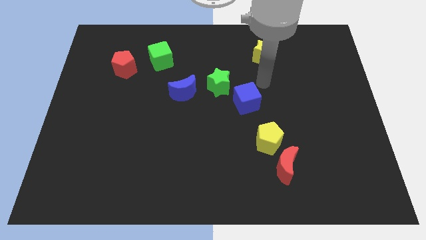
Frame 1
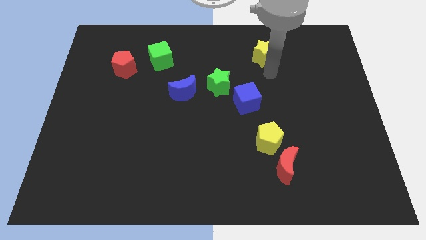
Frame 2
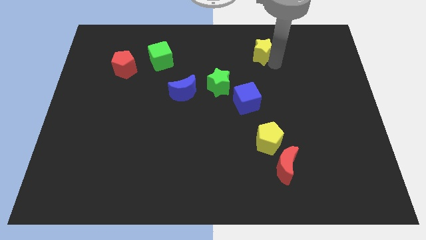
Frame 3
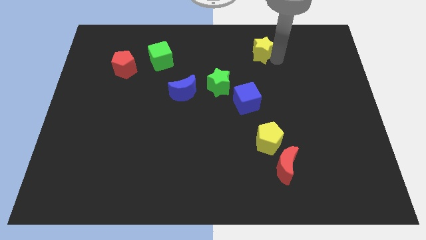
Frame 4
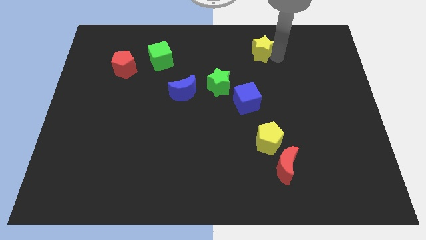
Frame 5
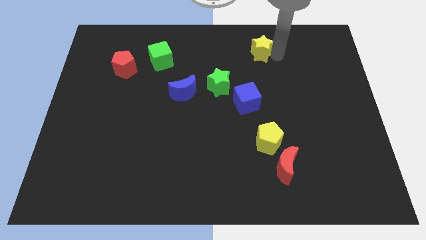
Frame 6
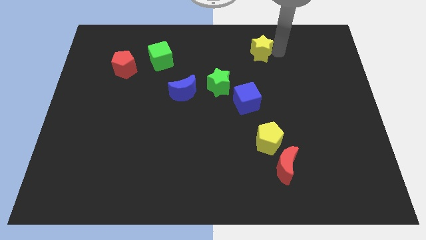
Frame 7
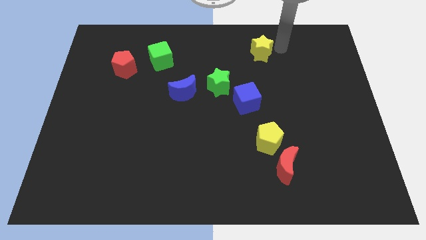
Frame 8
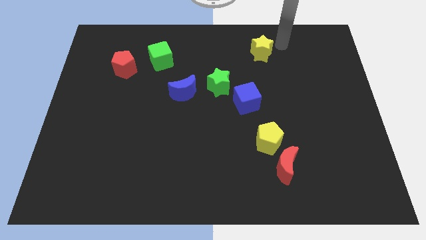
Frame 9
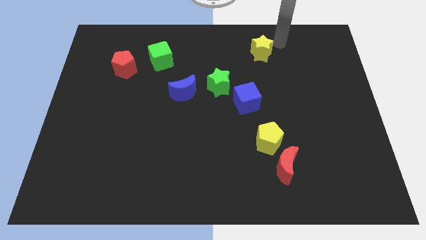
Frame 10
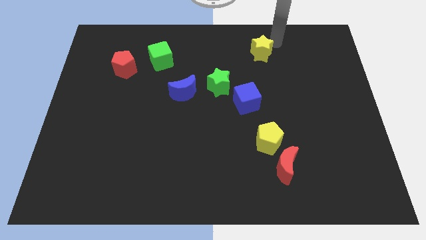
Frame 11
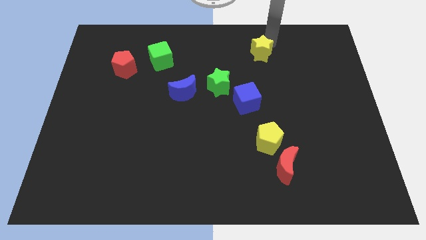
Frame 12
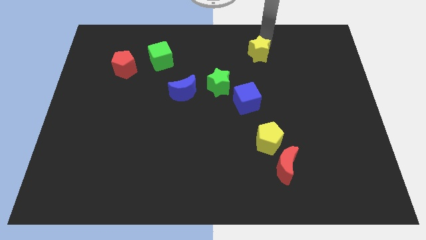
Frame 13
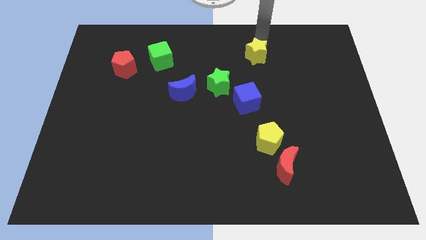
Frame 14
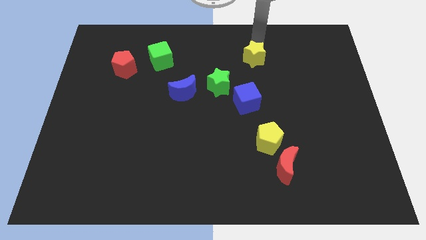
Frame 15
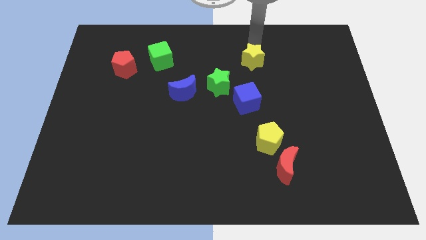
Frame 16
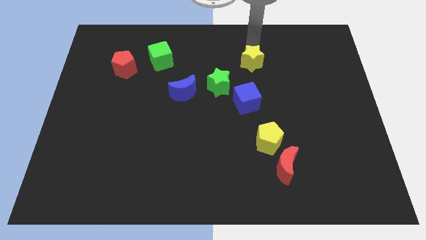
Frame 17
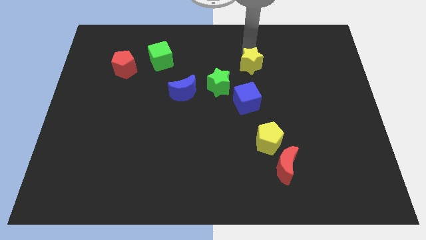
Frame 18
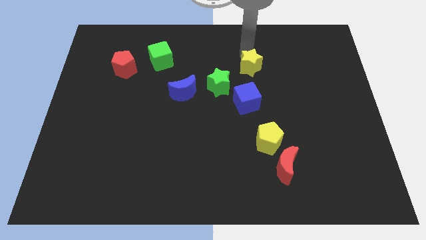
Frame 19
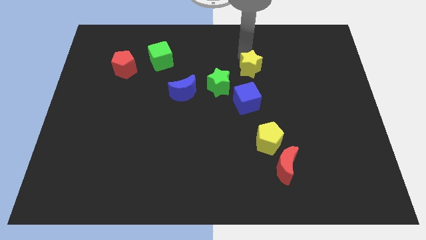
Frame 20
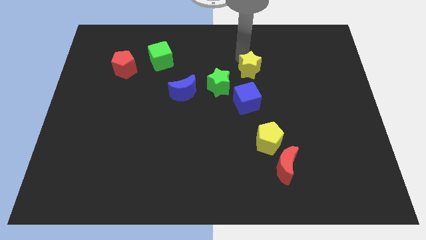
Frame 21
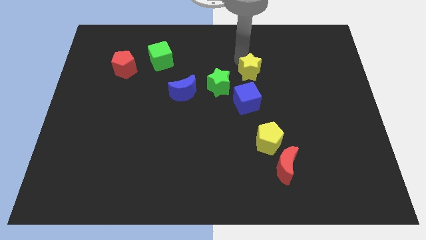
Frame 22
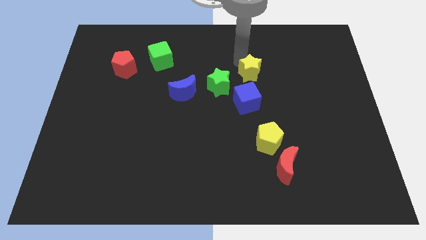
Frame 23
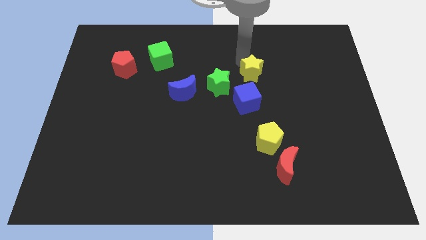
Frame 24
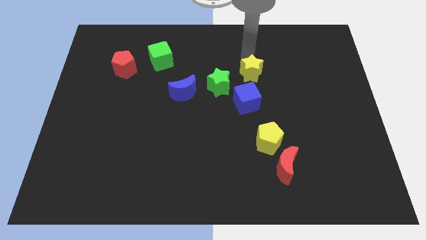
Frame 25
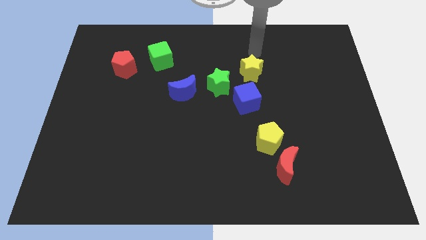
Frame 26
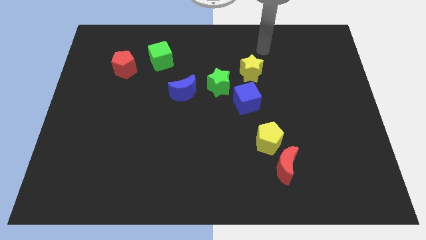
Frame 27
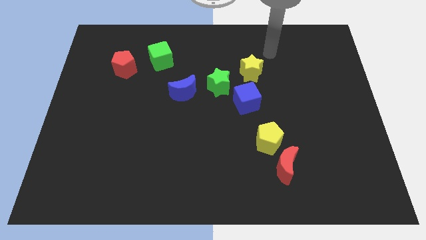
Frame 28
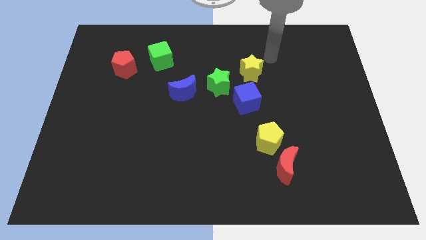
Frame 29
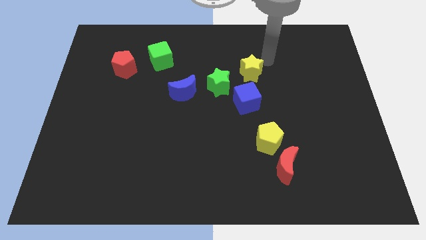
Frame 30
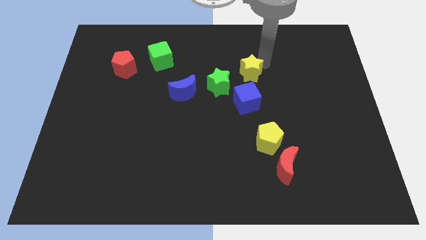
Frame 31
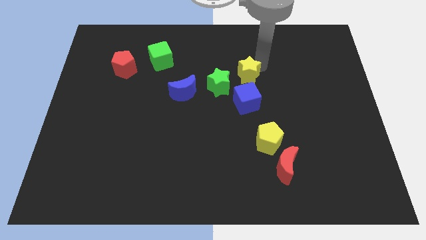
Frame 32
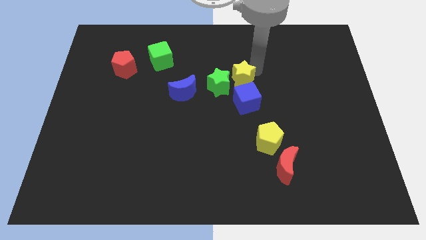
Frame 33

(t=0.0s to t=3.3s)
place the yellow star above the blue cube

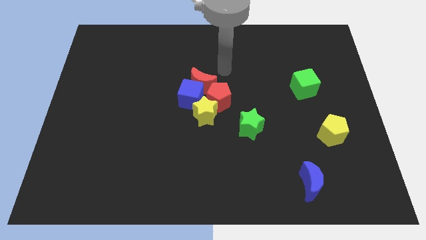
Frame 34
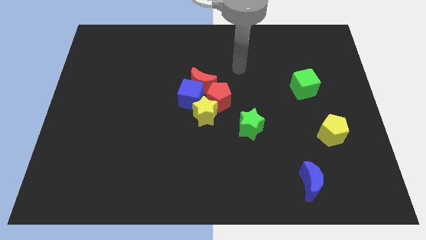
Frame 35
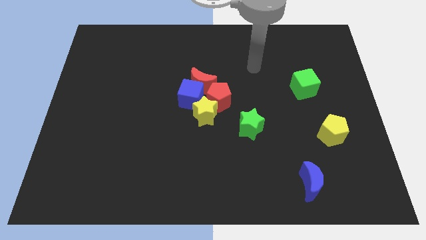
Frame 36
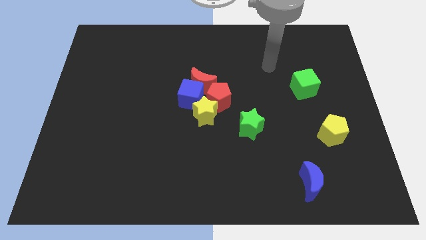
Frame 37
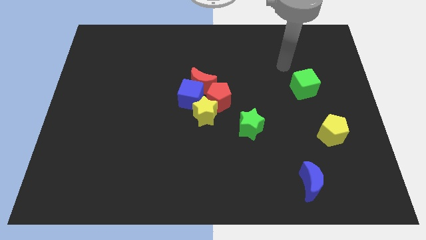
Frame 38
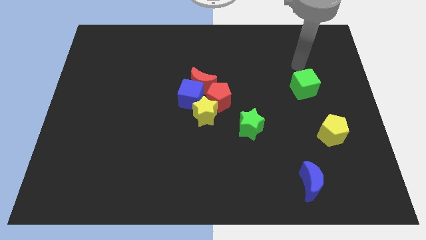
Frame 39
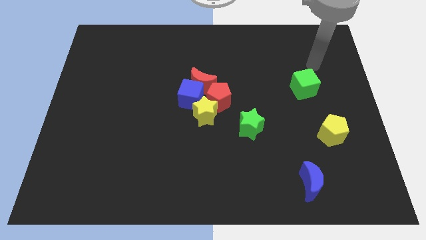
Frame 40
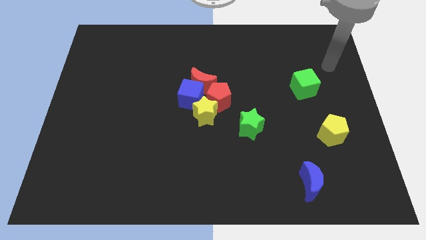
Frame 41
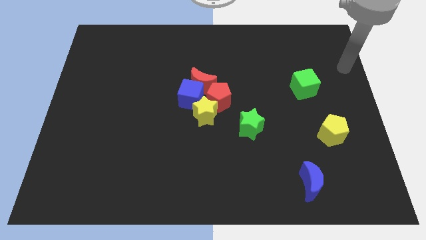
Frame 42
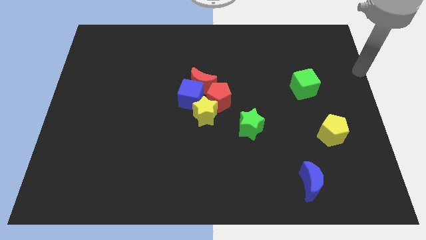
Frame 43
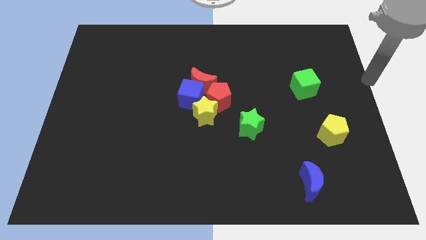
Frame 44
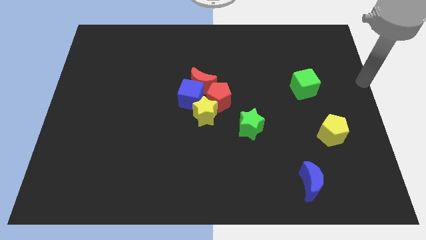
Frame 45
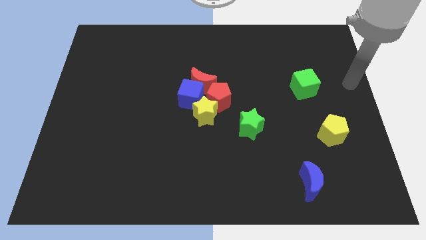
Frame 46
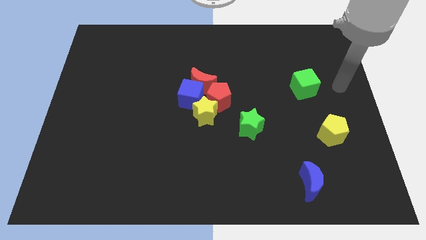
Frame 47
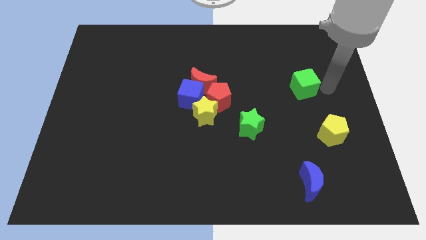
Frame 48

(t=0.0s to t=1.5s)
point your arm at the right of the green cube

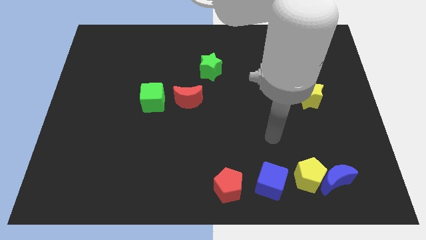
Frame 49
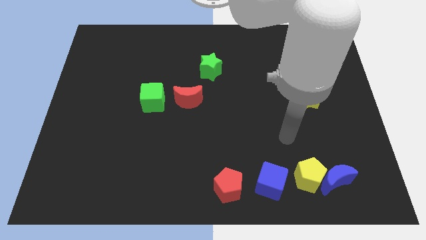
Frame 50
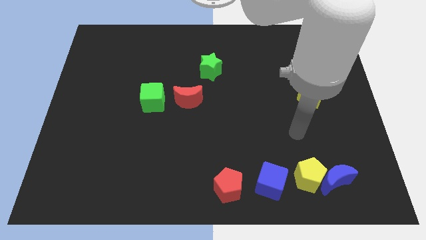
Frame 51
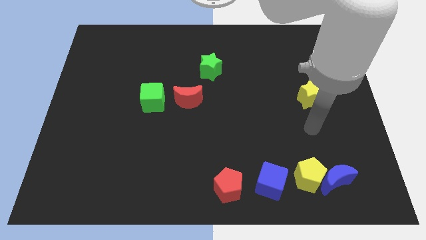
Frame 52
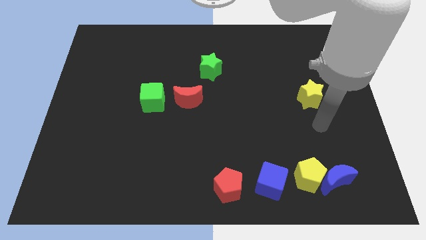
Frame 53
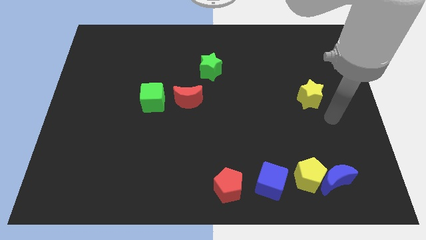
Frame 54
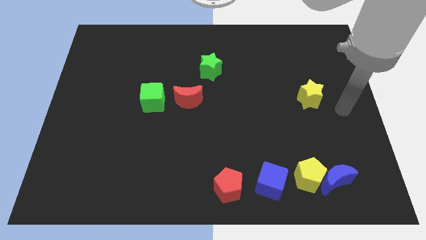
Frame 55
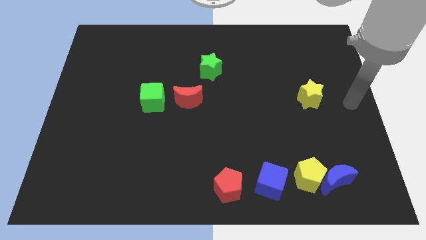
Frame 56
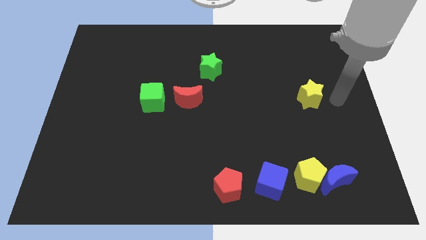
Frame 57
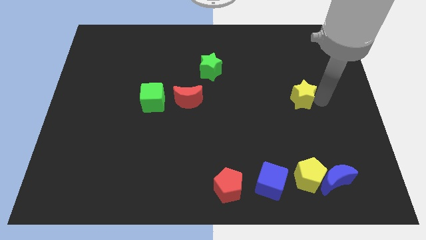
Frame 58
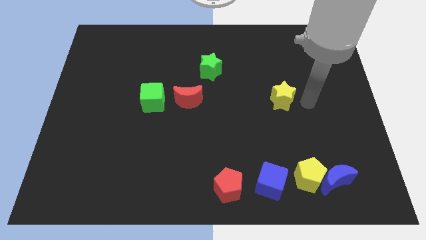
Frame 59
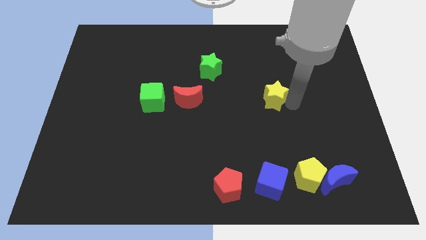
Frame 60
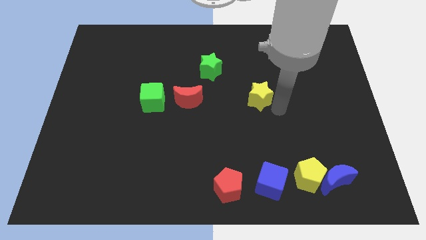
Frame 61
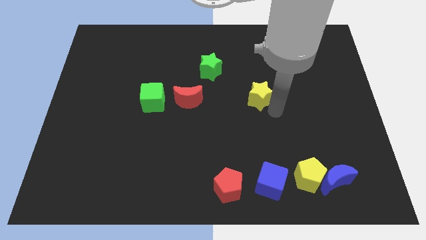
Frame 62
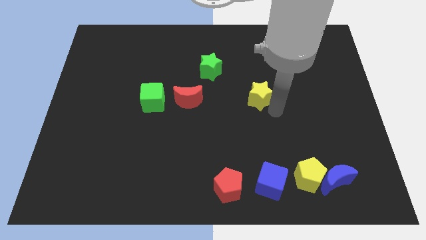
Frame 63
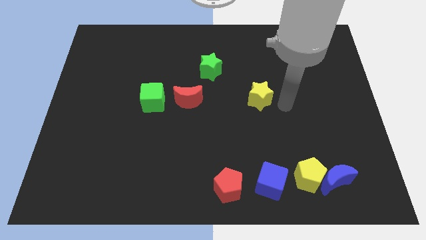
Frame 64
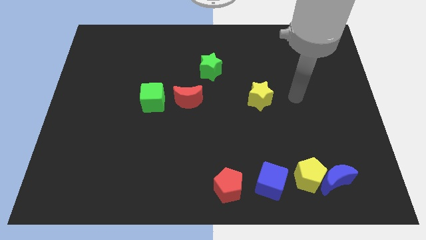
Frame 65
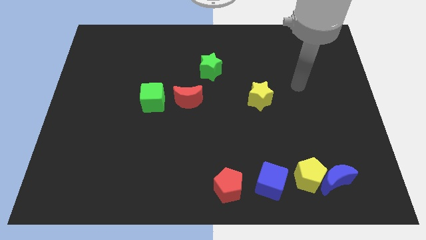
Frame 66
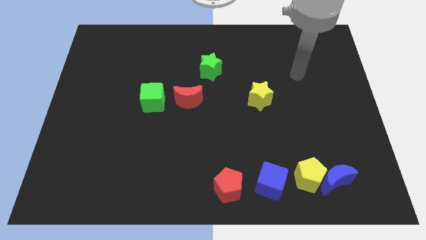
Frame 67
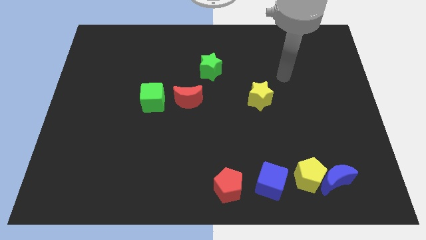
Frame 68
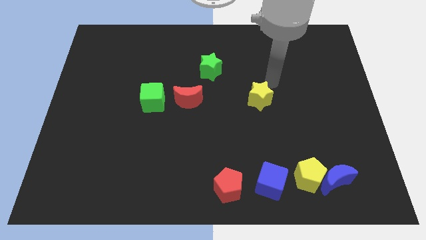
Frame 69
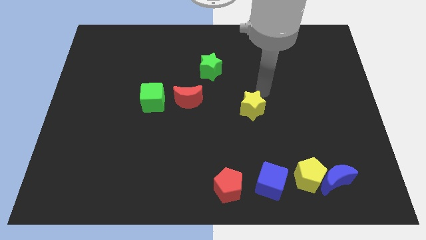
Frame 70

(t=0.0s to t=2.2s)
place the yellow star diagonally to green star

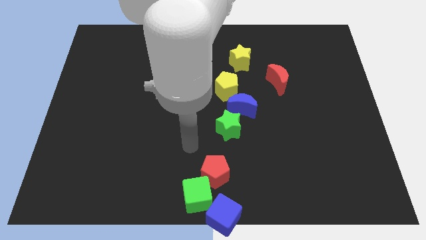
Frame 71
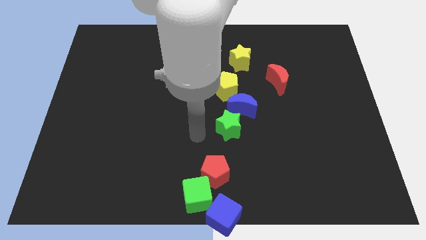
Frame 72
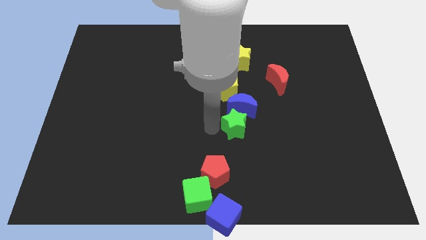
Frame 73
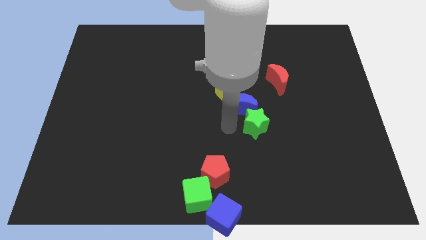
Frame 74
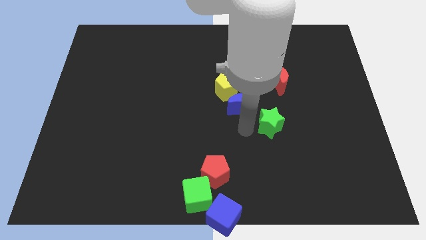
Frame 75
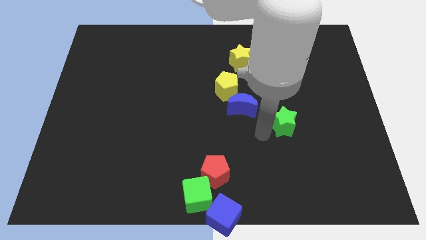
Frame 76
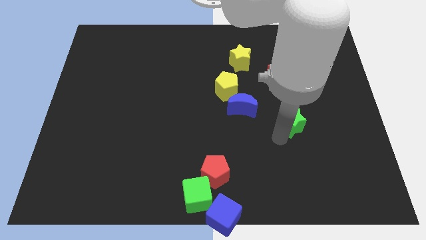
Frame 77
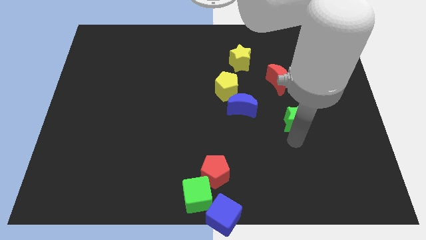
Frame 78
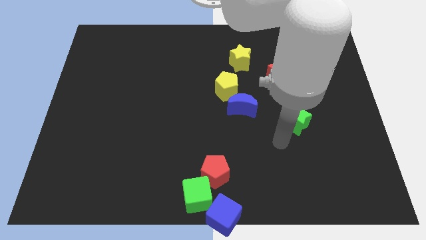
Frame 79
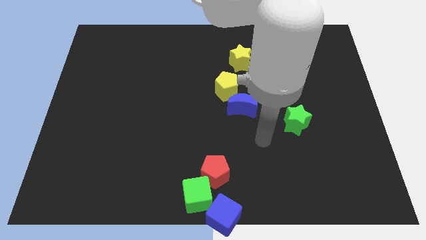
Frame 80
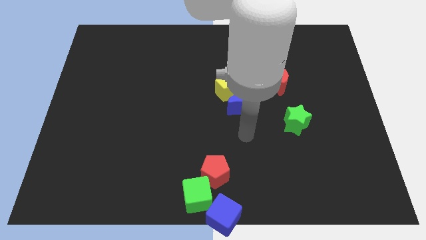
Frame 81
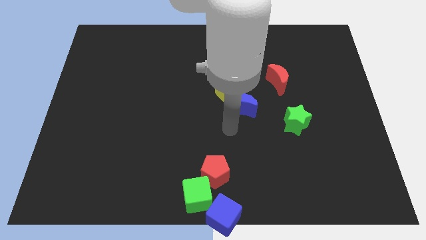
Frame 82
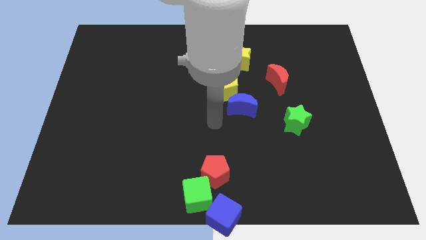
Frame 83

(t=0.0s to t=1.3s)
move the green star vertically to the bottom of the red crescent

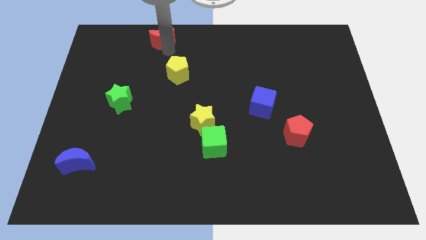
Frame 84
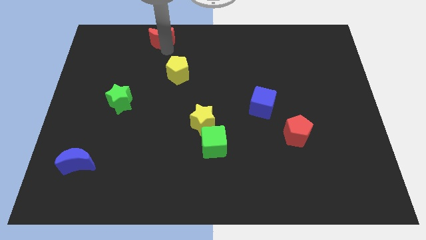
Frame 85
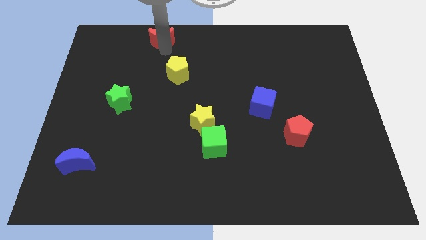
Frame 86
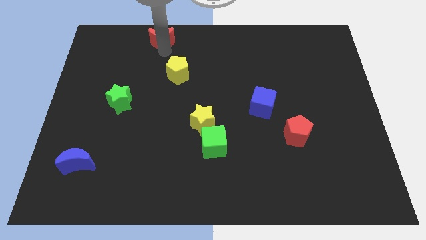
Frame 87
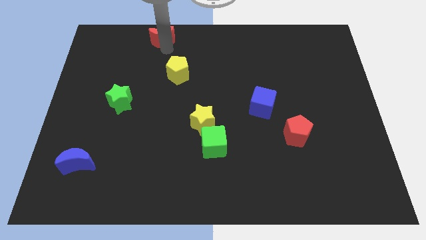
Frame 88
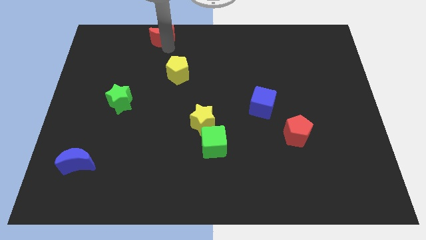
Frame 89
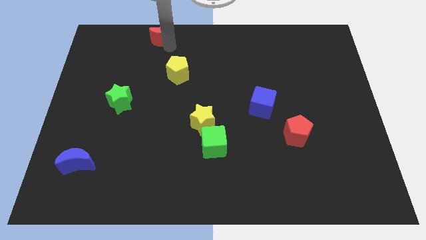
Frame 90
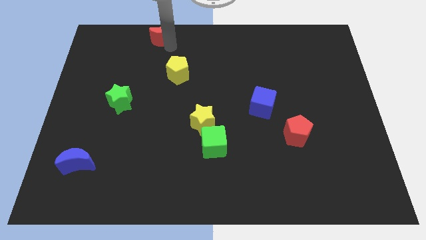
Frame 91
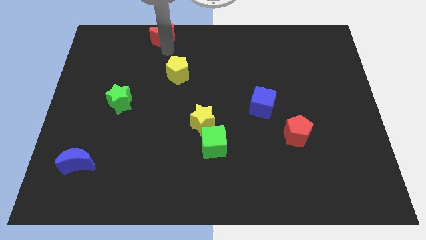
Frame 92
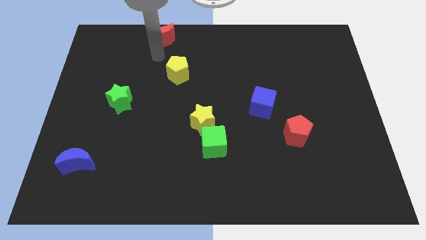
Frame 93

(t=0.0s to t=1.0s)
slightly move the red moon to the top
